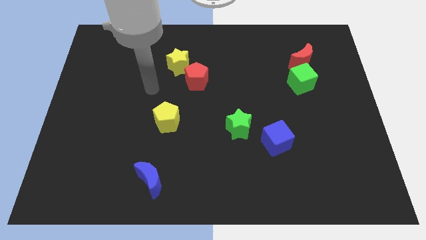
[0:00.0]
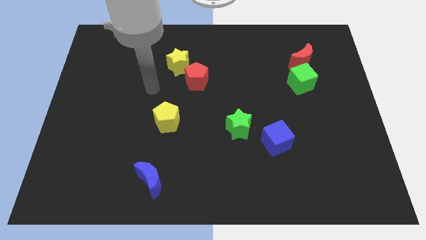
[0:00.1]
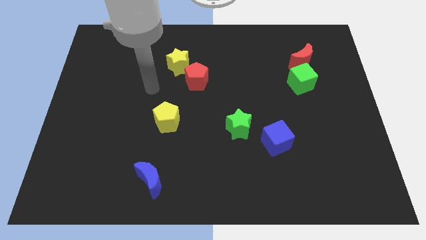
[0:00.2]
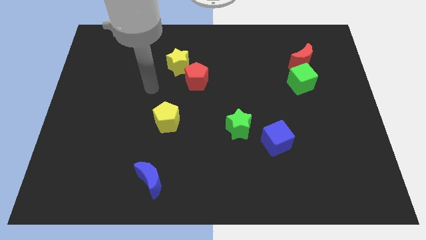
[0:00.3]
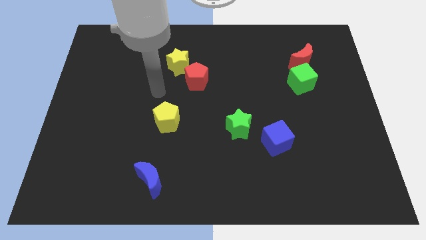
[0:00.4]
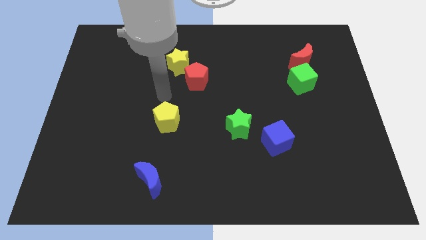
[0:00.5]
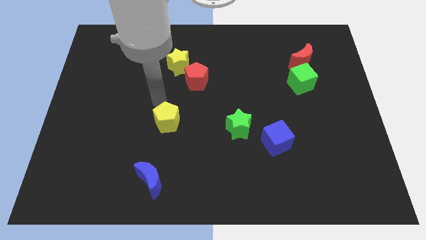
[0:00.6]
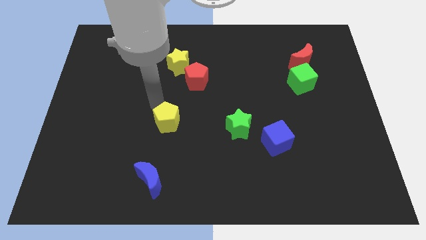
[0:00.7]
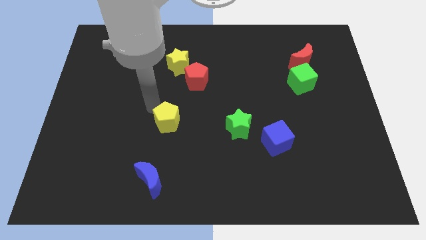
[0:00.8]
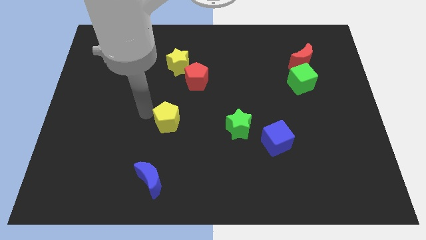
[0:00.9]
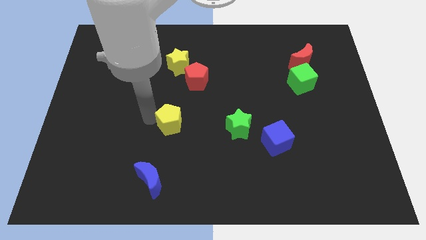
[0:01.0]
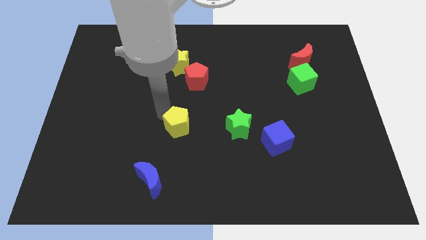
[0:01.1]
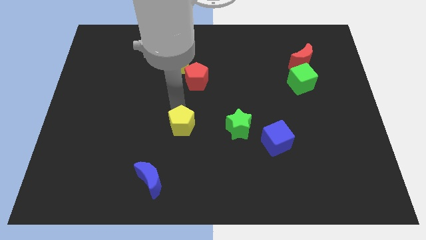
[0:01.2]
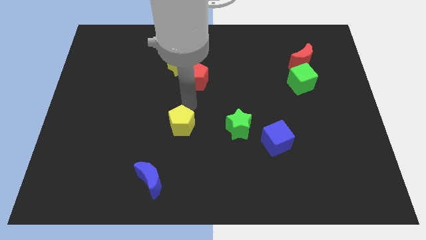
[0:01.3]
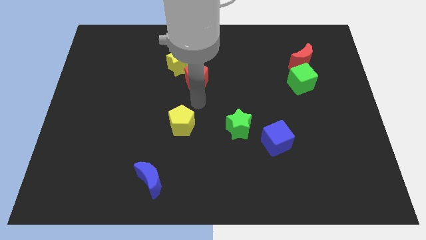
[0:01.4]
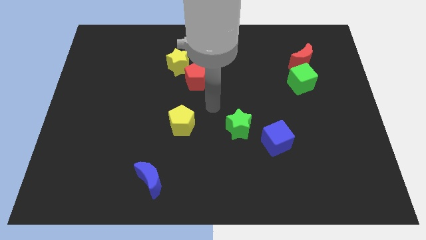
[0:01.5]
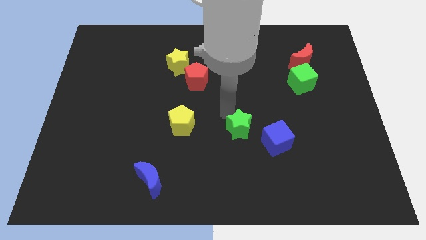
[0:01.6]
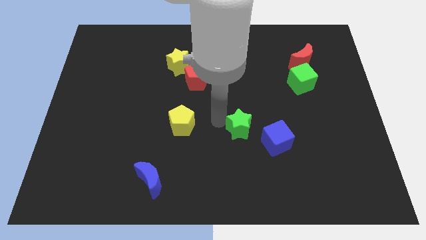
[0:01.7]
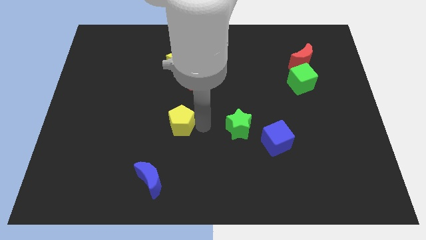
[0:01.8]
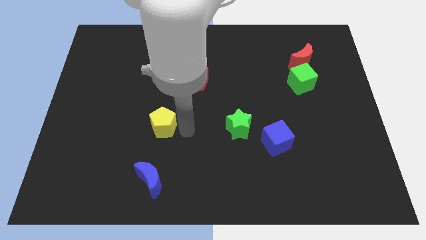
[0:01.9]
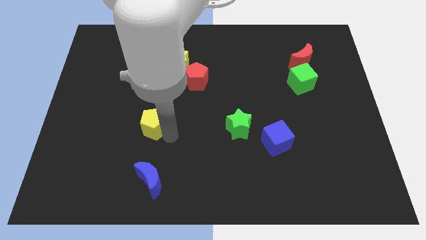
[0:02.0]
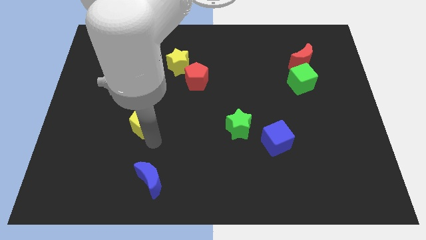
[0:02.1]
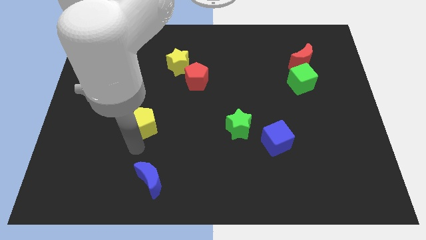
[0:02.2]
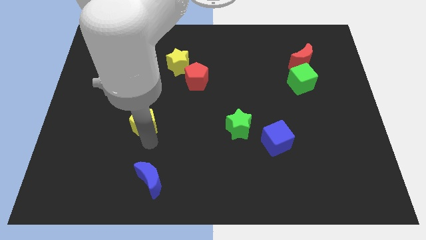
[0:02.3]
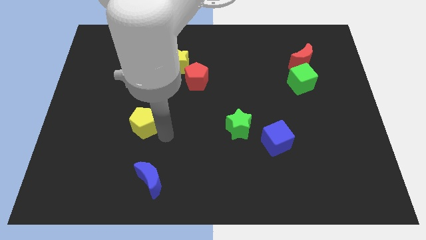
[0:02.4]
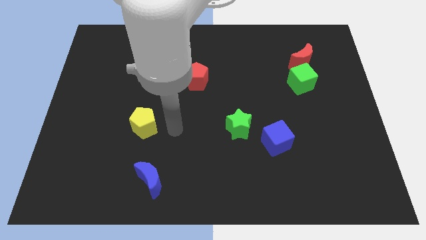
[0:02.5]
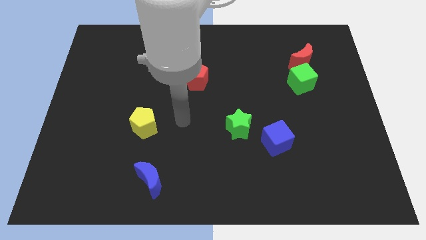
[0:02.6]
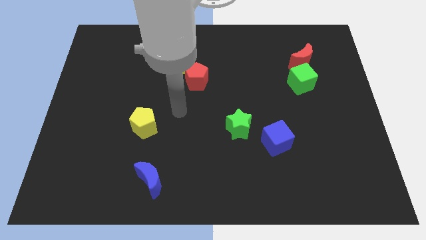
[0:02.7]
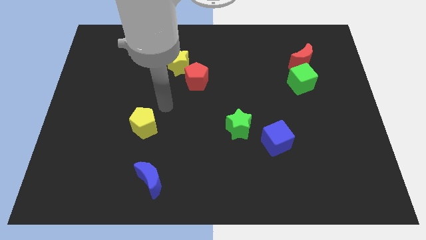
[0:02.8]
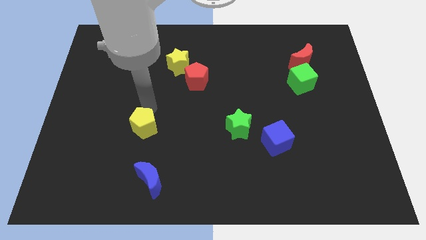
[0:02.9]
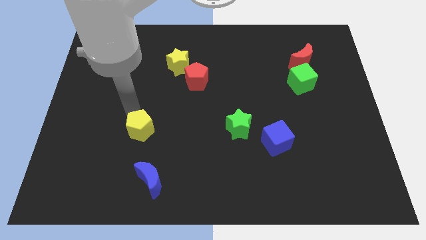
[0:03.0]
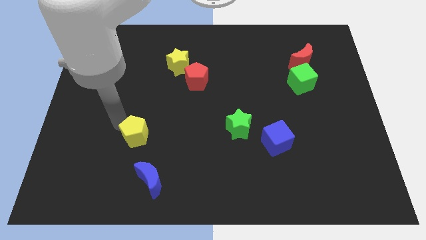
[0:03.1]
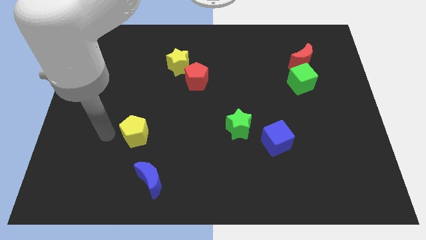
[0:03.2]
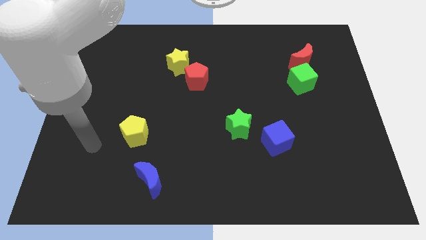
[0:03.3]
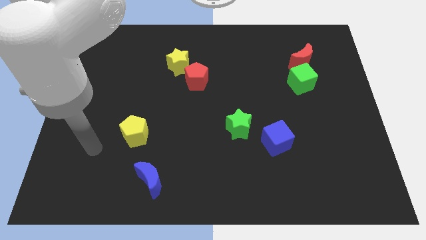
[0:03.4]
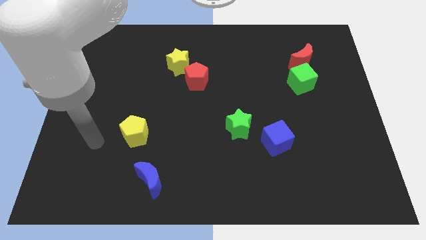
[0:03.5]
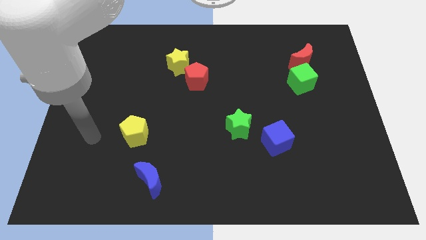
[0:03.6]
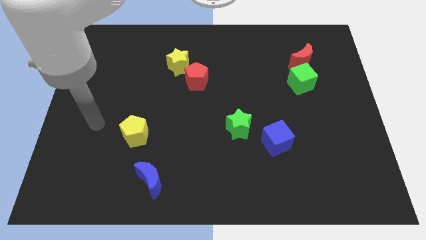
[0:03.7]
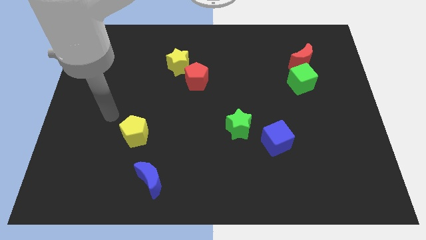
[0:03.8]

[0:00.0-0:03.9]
move the yellow pentagon parallel to the top of the blue crescent

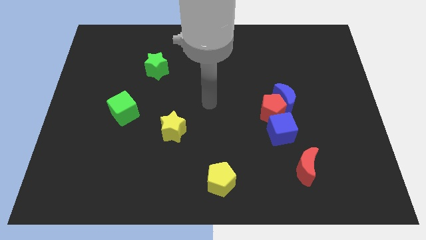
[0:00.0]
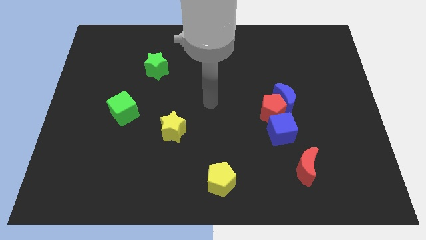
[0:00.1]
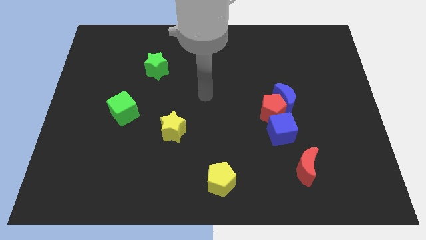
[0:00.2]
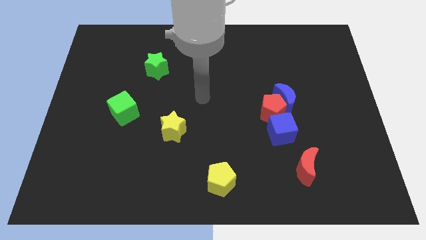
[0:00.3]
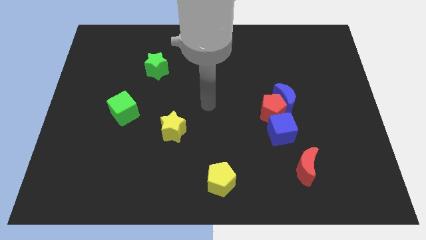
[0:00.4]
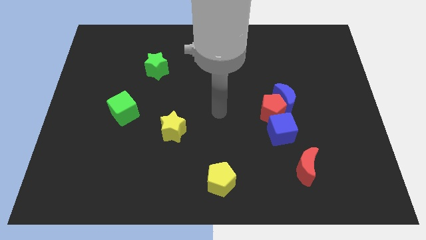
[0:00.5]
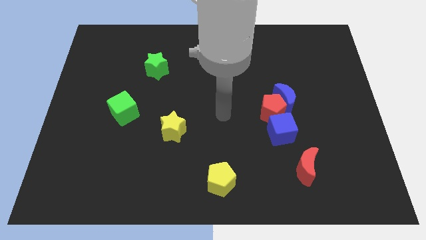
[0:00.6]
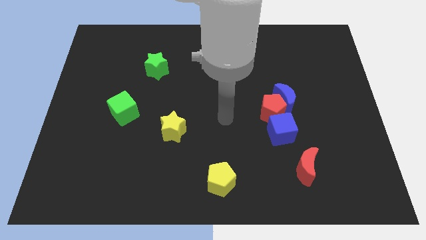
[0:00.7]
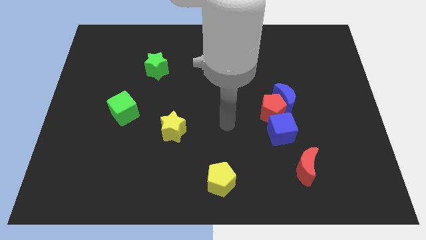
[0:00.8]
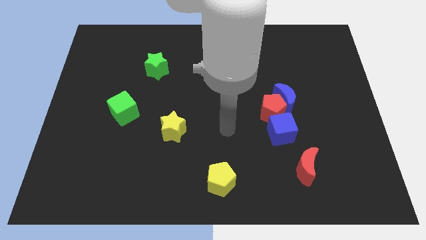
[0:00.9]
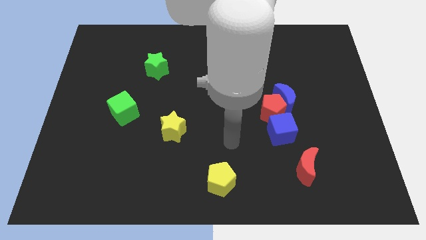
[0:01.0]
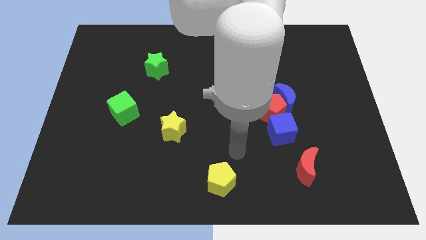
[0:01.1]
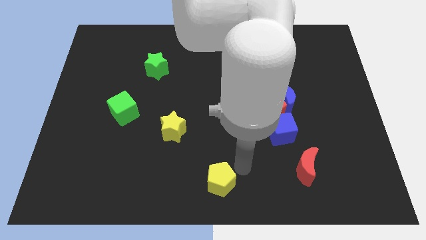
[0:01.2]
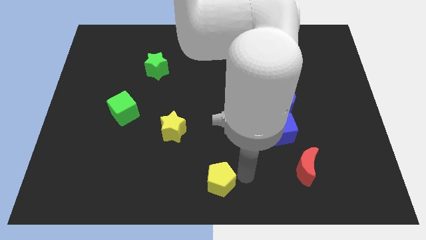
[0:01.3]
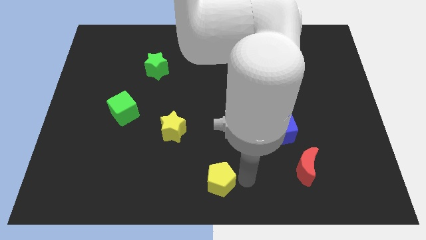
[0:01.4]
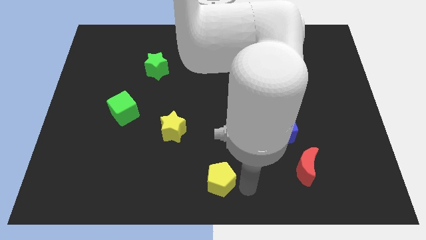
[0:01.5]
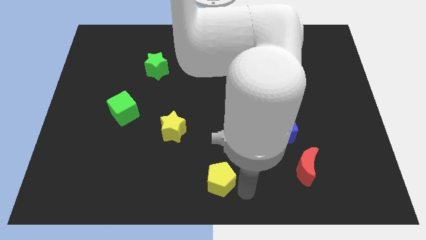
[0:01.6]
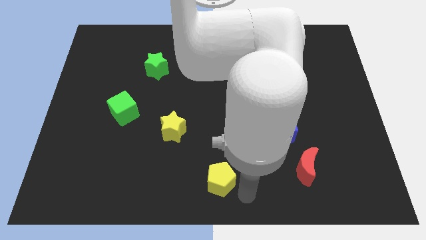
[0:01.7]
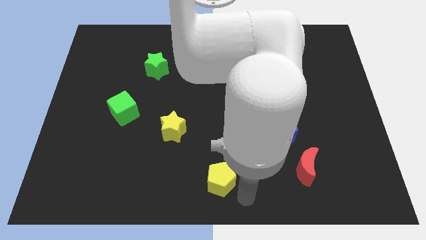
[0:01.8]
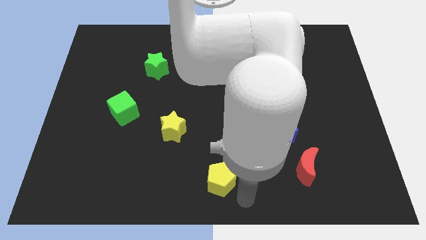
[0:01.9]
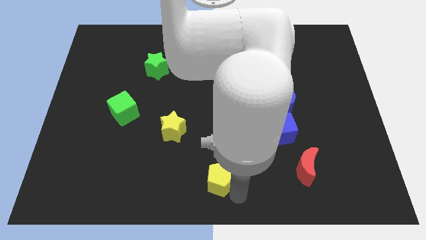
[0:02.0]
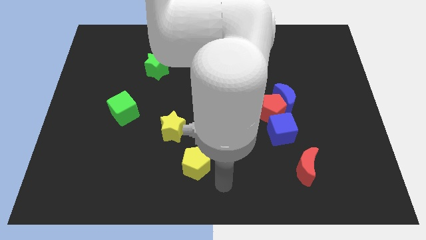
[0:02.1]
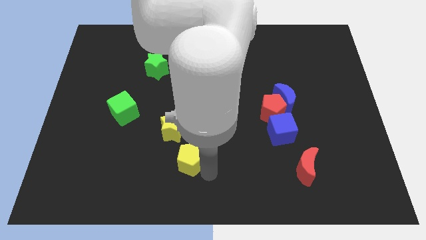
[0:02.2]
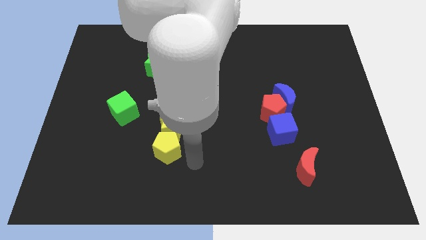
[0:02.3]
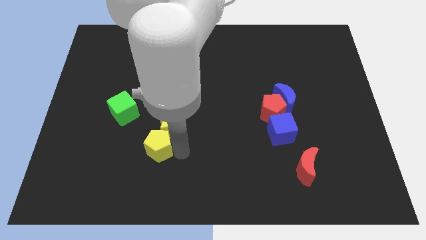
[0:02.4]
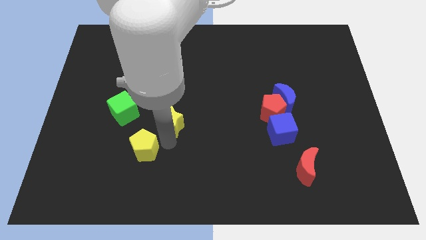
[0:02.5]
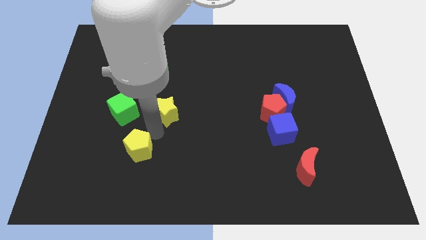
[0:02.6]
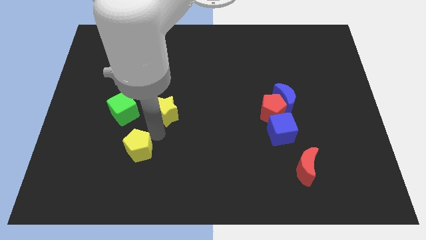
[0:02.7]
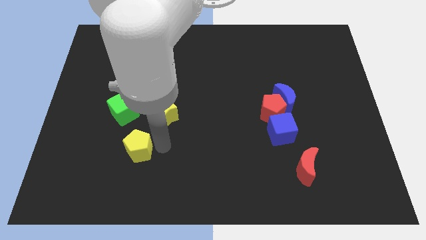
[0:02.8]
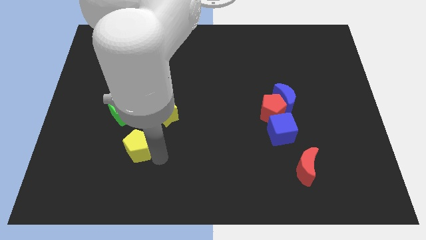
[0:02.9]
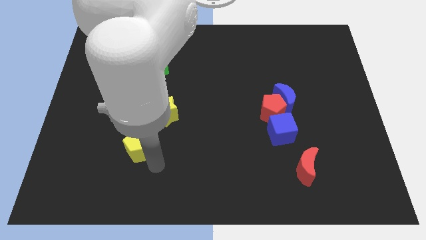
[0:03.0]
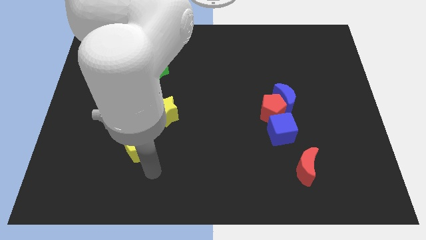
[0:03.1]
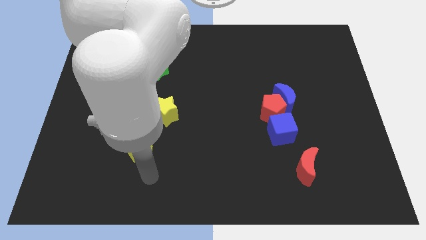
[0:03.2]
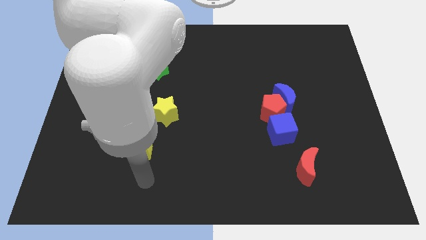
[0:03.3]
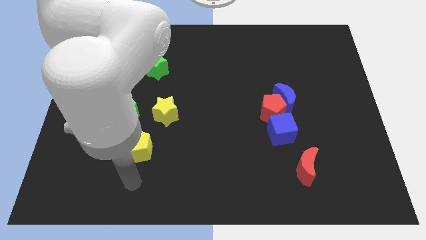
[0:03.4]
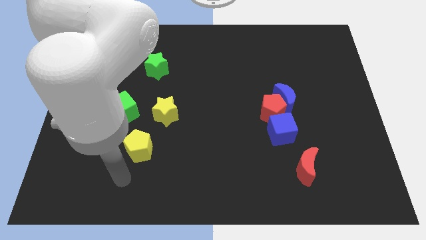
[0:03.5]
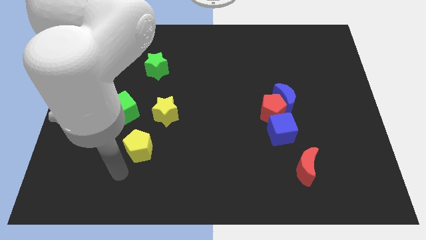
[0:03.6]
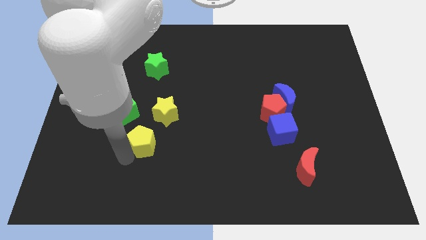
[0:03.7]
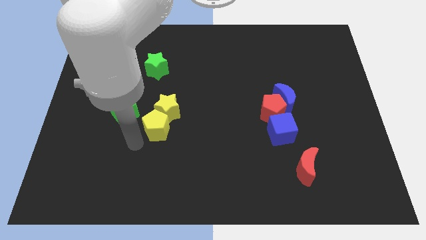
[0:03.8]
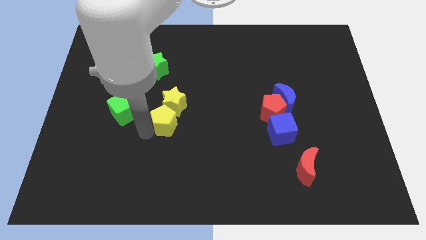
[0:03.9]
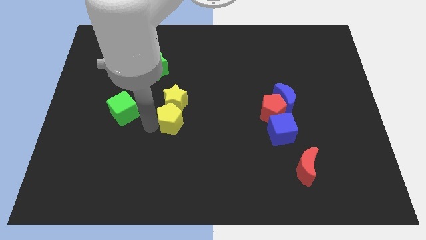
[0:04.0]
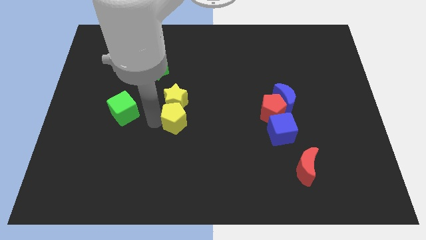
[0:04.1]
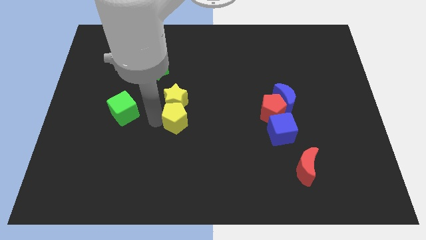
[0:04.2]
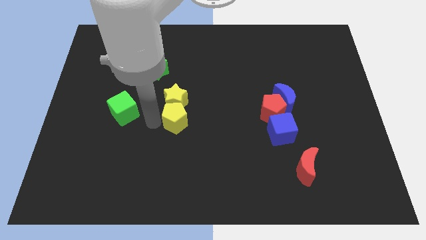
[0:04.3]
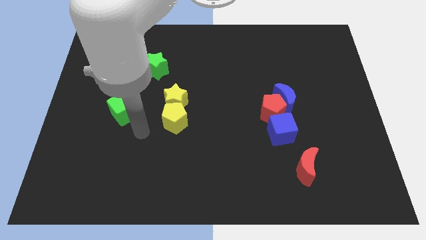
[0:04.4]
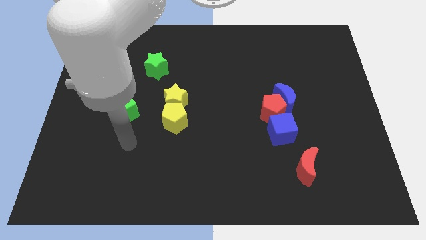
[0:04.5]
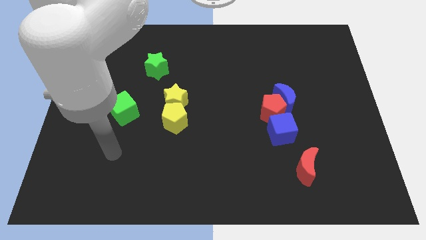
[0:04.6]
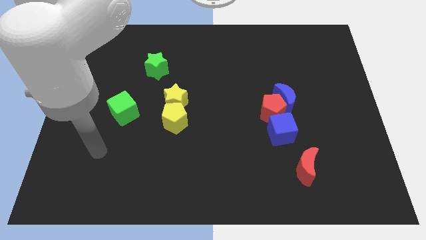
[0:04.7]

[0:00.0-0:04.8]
place yellow pentagon below the yellow star

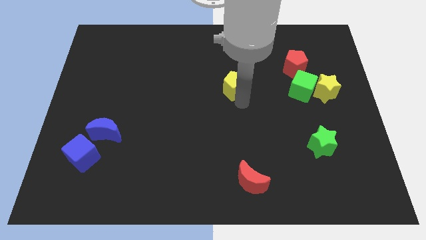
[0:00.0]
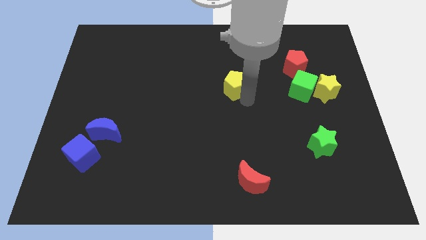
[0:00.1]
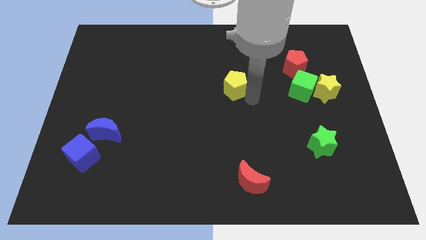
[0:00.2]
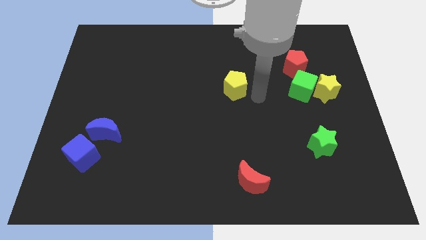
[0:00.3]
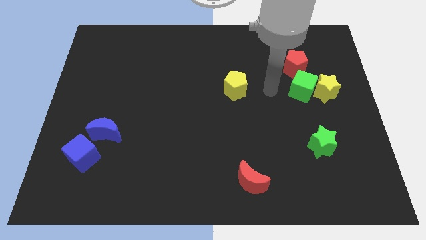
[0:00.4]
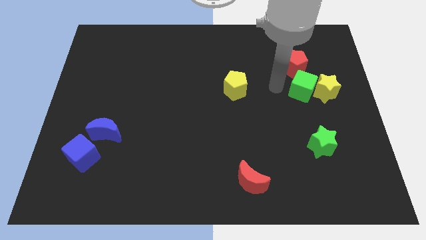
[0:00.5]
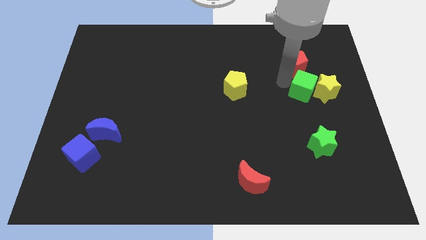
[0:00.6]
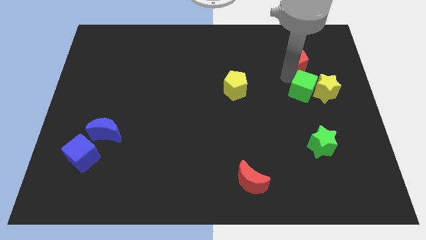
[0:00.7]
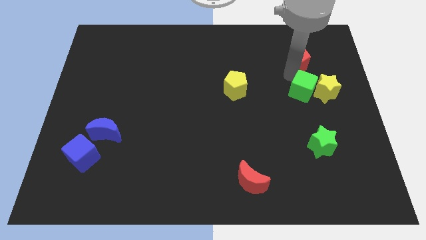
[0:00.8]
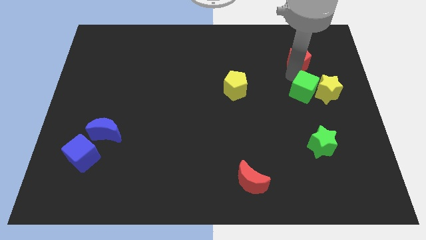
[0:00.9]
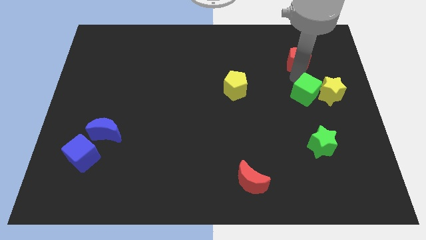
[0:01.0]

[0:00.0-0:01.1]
put your arm in between green cube and red pentagon
